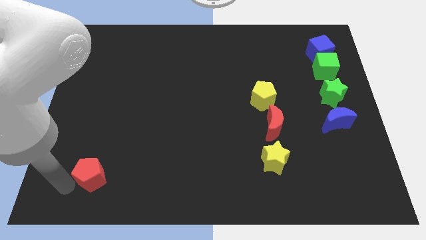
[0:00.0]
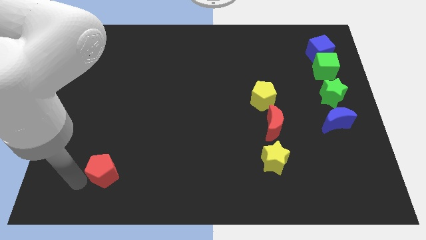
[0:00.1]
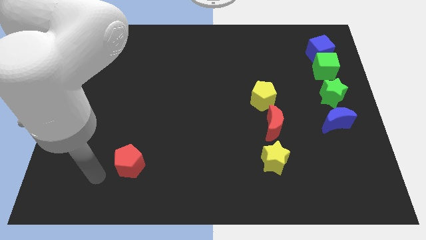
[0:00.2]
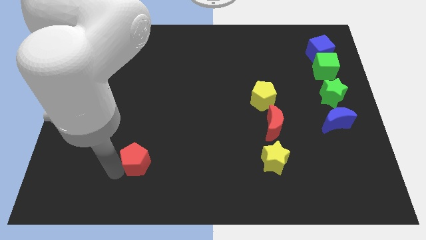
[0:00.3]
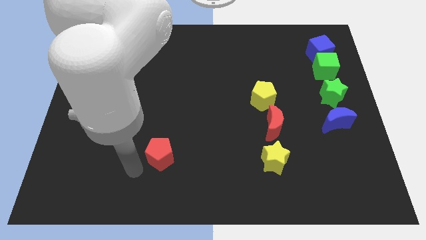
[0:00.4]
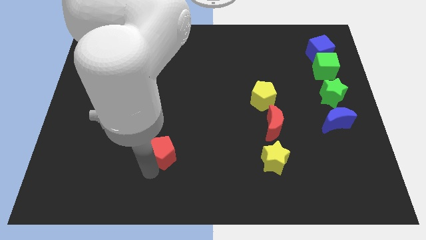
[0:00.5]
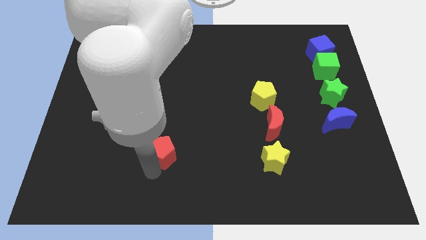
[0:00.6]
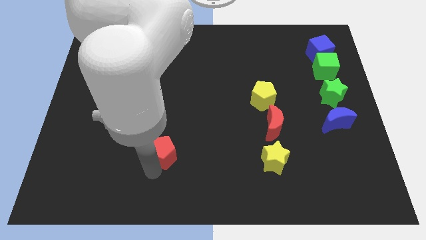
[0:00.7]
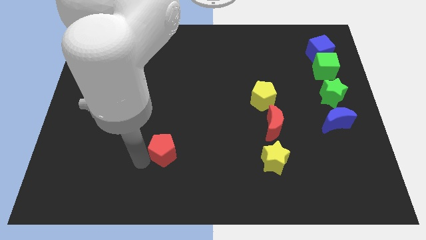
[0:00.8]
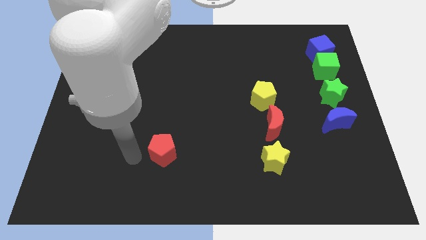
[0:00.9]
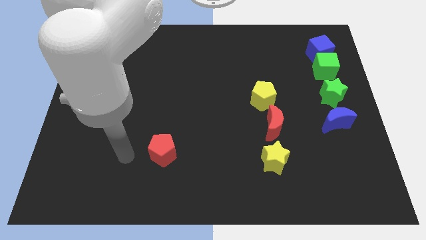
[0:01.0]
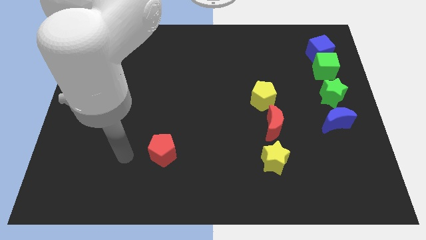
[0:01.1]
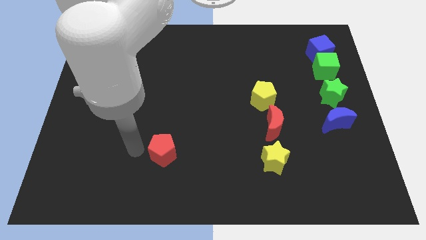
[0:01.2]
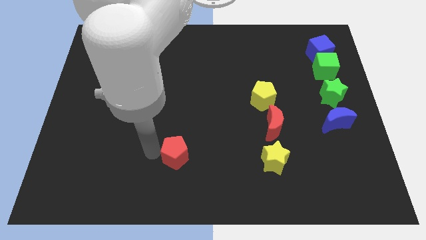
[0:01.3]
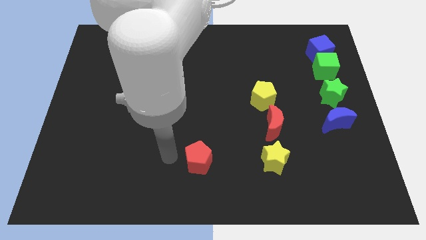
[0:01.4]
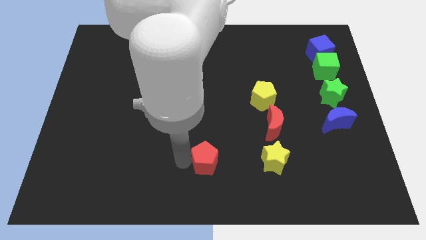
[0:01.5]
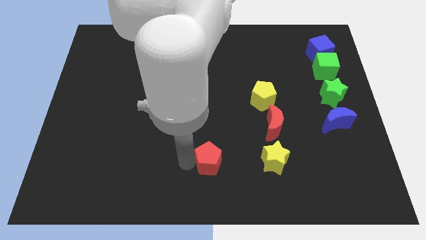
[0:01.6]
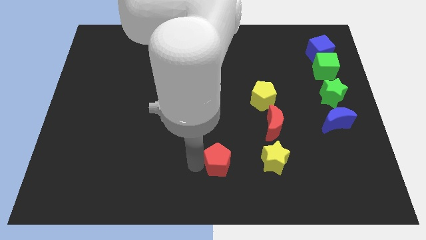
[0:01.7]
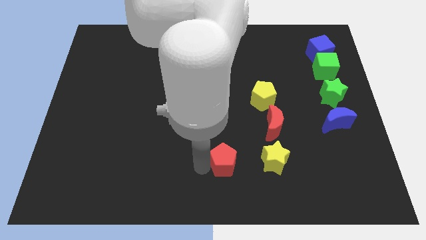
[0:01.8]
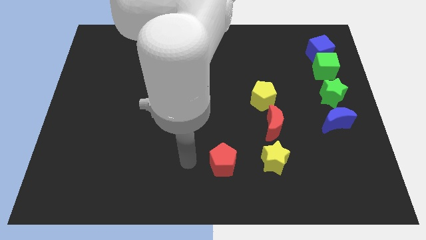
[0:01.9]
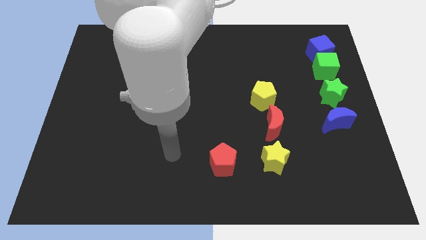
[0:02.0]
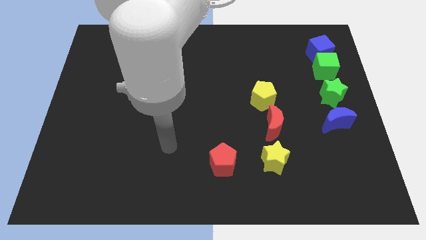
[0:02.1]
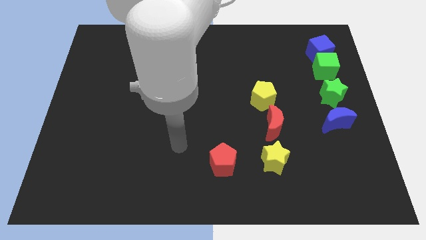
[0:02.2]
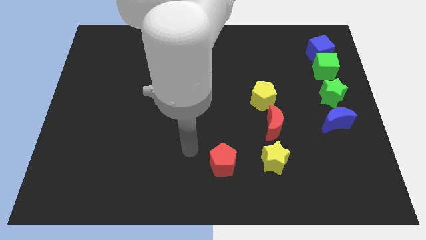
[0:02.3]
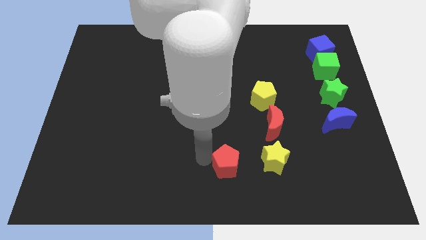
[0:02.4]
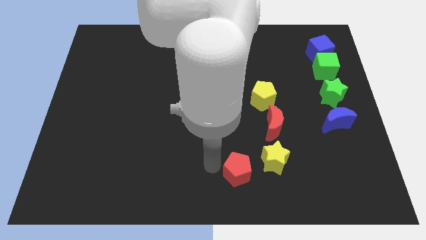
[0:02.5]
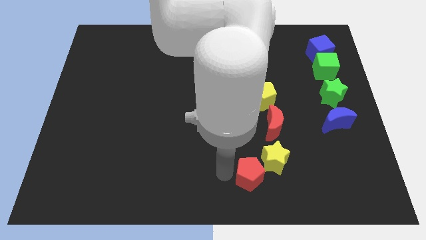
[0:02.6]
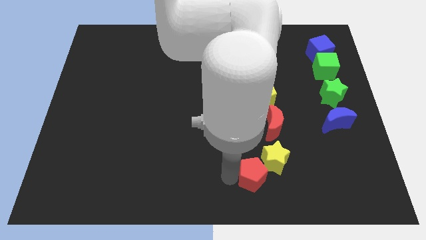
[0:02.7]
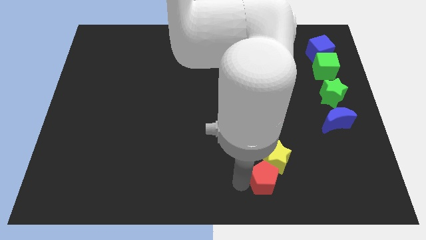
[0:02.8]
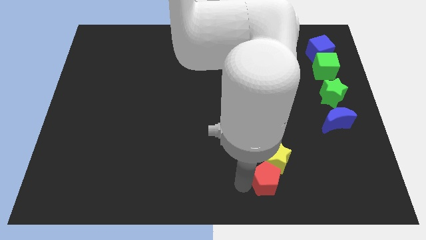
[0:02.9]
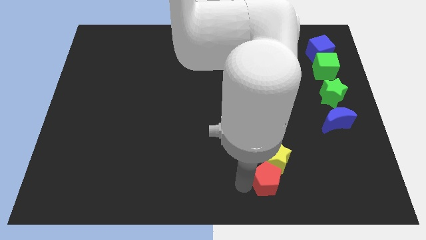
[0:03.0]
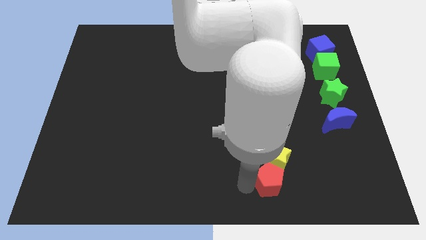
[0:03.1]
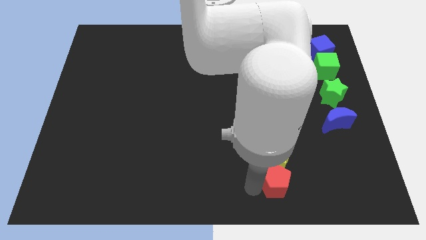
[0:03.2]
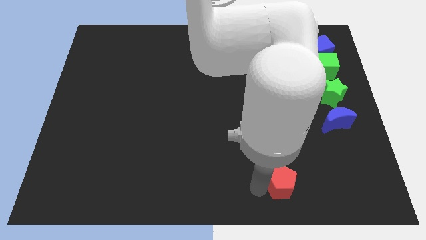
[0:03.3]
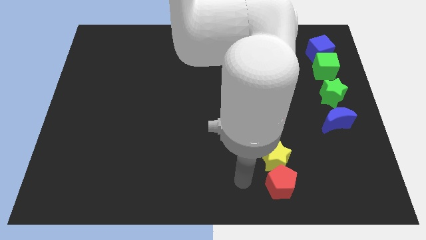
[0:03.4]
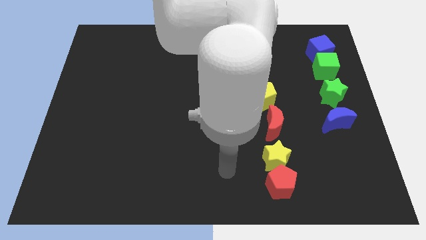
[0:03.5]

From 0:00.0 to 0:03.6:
place red pentagon in vertical line to the yellow star

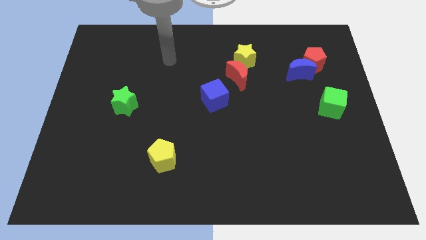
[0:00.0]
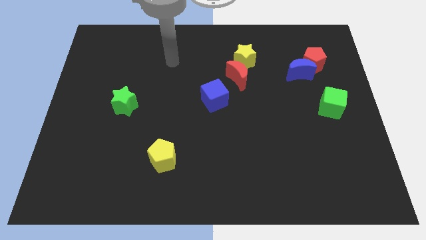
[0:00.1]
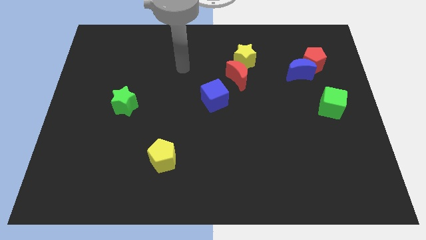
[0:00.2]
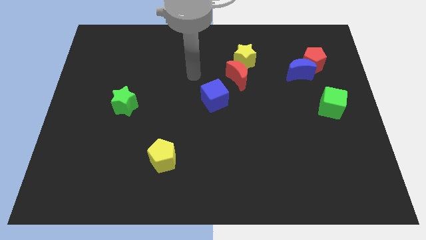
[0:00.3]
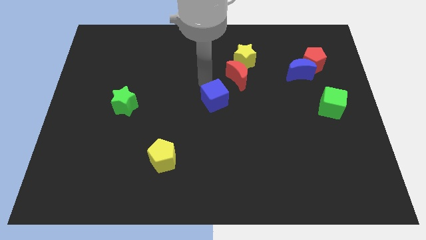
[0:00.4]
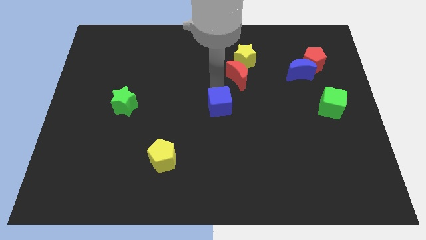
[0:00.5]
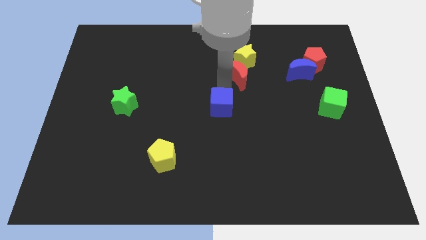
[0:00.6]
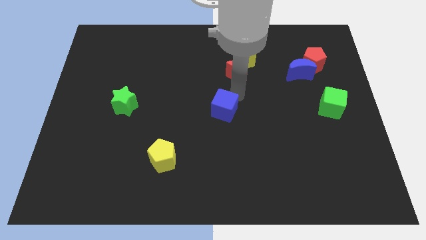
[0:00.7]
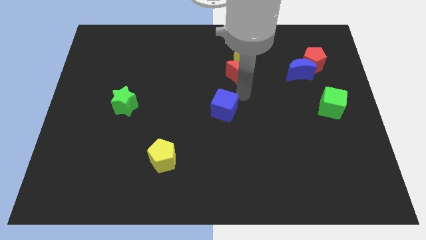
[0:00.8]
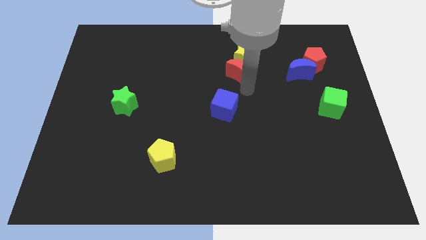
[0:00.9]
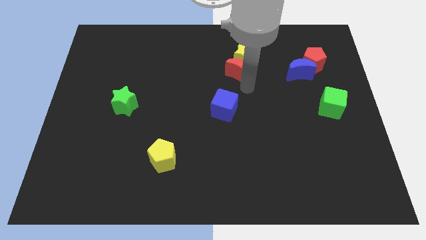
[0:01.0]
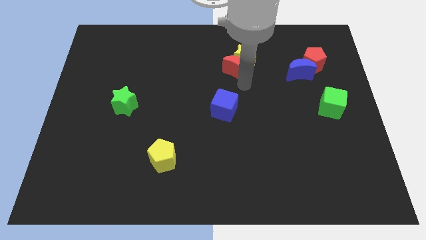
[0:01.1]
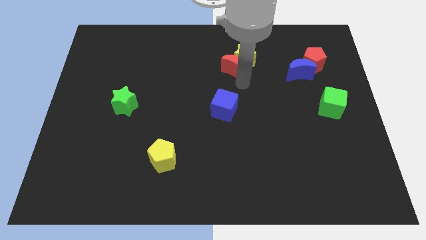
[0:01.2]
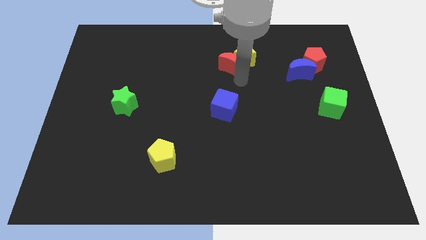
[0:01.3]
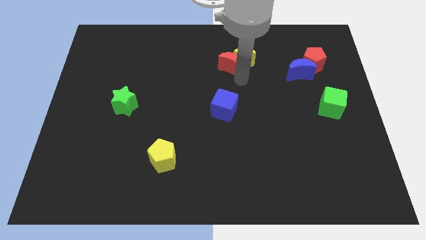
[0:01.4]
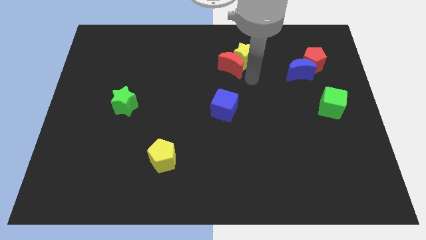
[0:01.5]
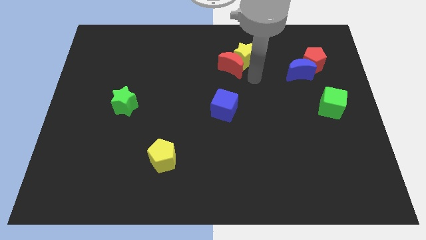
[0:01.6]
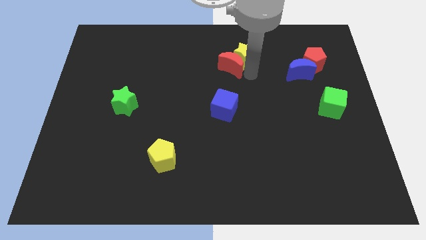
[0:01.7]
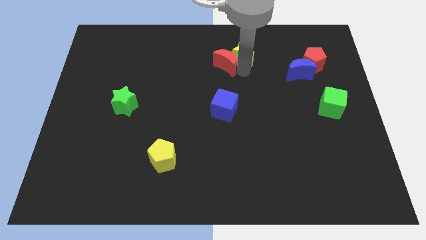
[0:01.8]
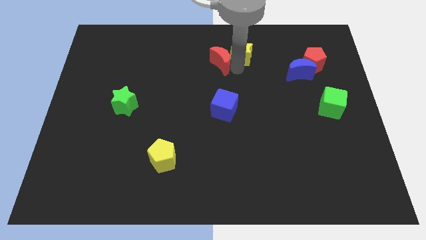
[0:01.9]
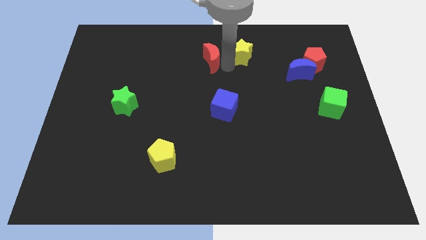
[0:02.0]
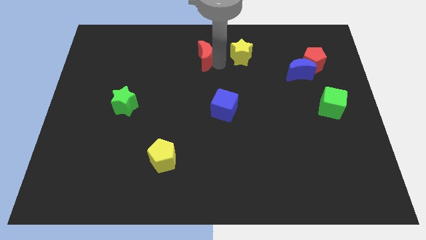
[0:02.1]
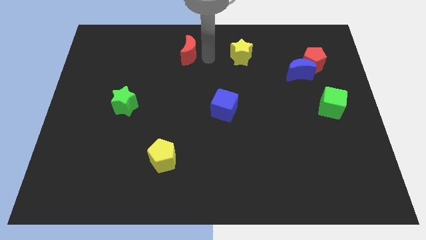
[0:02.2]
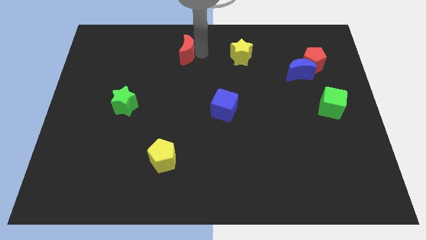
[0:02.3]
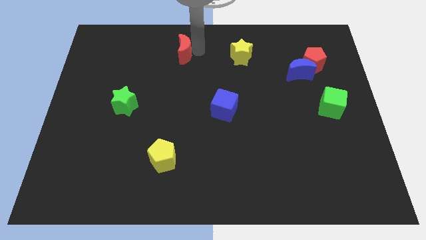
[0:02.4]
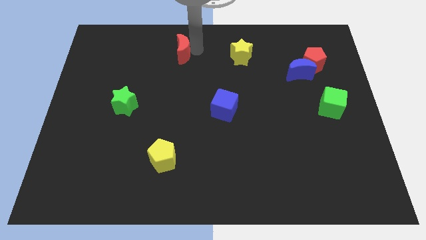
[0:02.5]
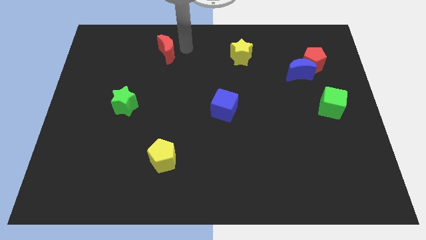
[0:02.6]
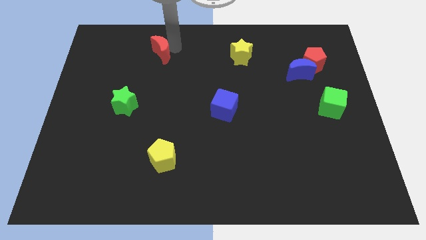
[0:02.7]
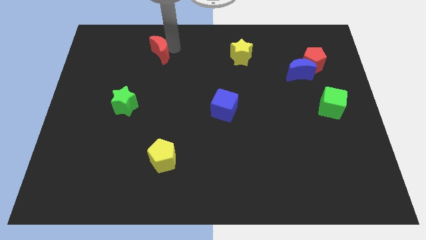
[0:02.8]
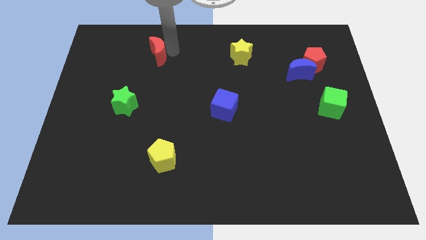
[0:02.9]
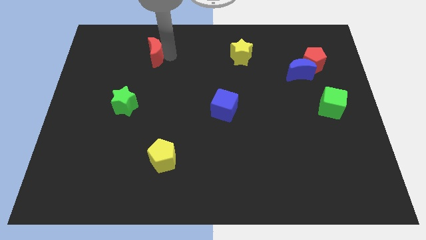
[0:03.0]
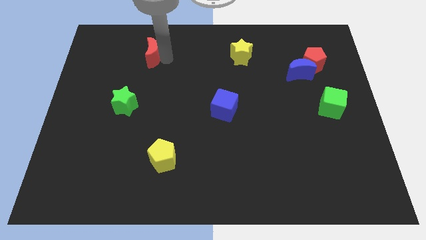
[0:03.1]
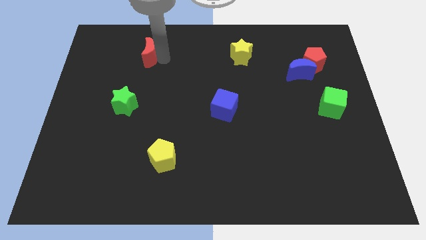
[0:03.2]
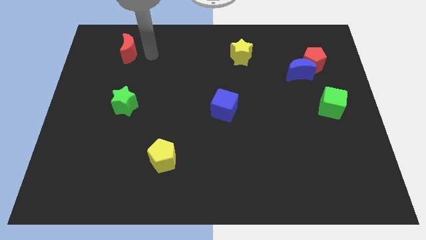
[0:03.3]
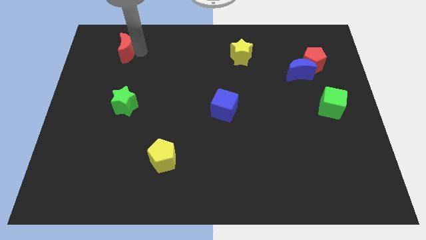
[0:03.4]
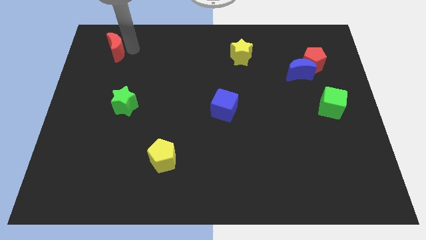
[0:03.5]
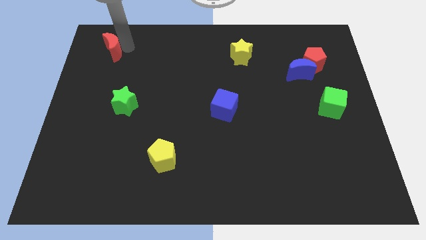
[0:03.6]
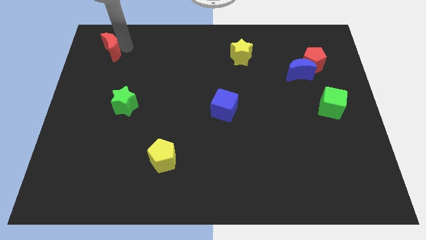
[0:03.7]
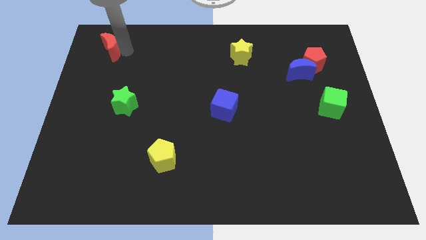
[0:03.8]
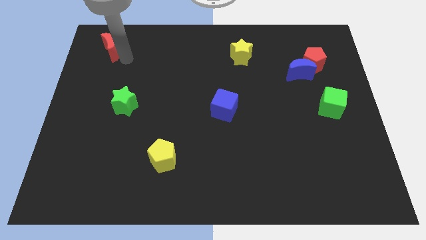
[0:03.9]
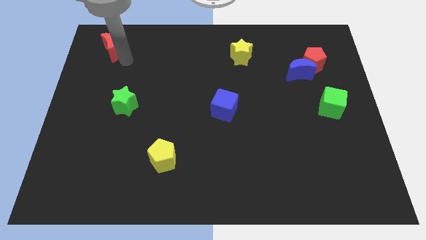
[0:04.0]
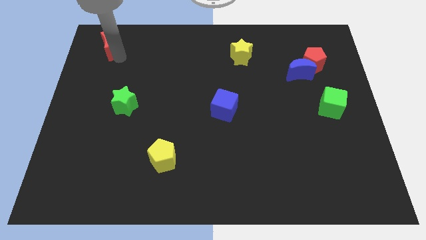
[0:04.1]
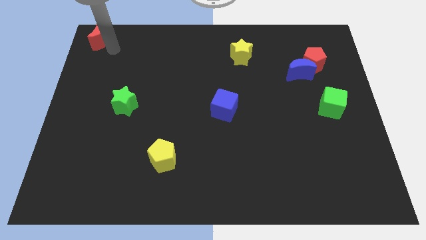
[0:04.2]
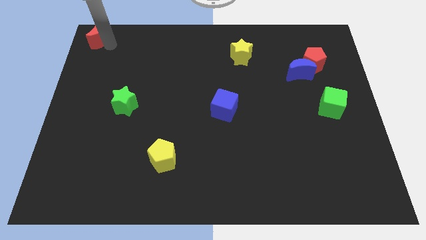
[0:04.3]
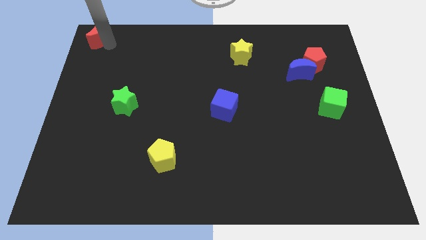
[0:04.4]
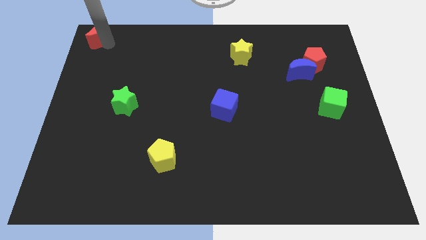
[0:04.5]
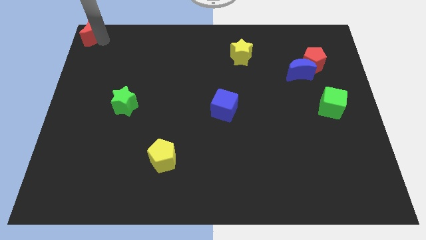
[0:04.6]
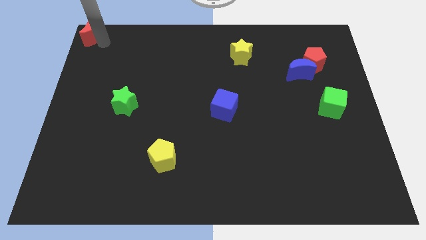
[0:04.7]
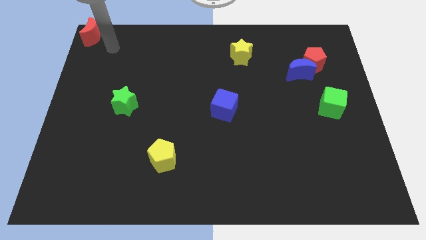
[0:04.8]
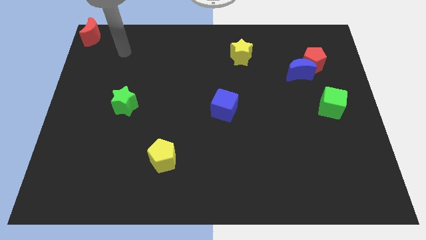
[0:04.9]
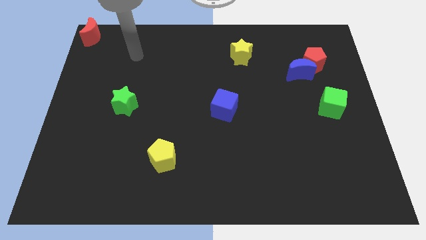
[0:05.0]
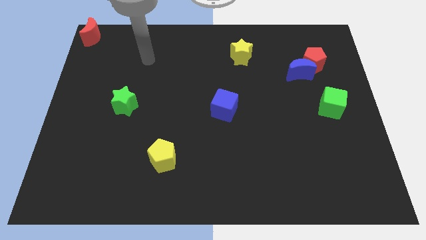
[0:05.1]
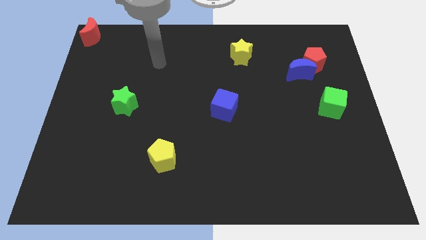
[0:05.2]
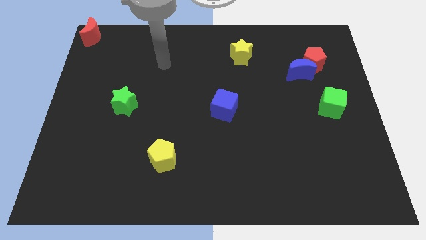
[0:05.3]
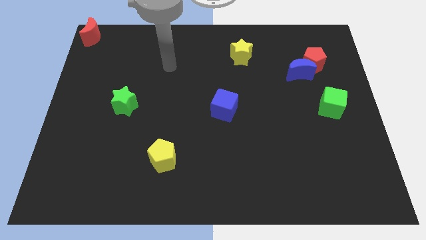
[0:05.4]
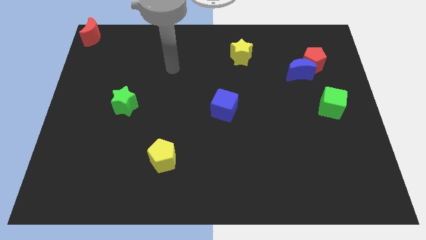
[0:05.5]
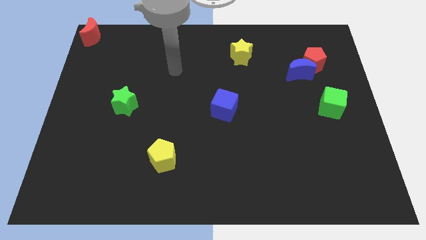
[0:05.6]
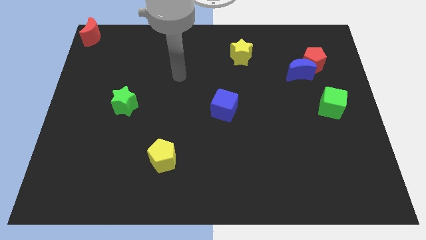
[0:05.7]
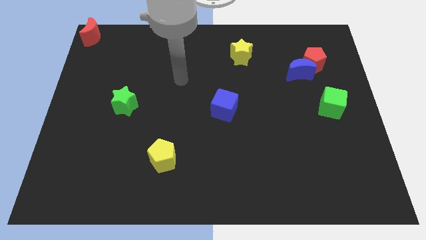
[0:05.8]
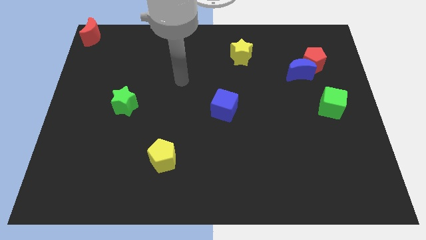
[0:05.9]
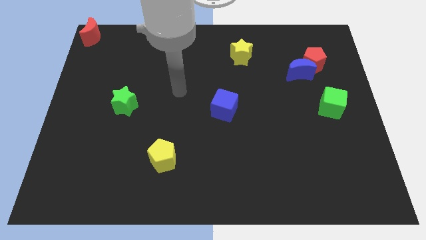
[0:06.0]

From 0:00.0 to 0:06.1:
move red crescent to the left top corner of the board
